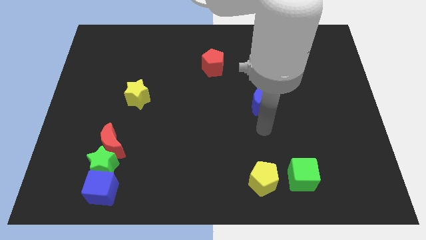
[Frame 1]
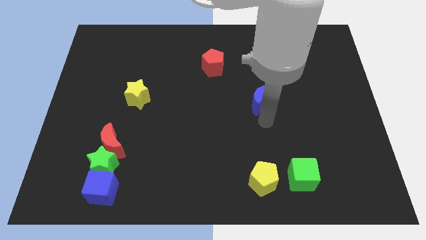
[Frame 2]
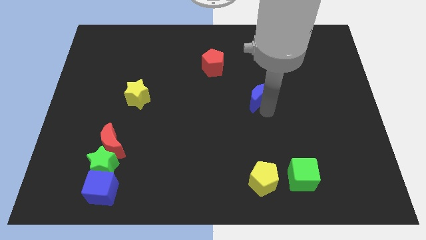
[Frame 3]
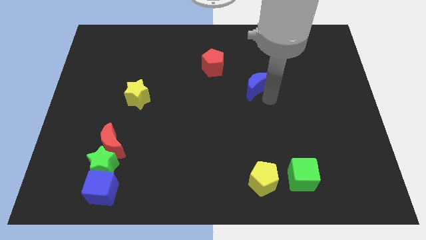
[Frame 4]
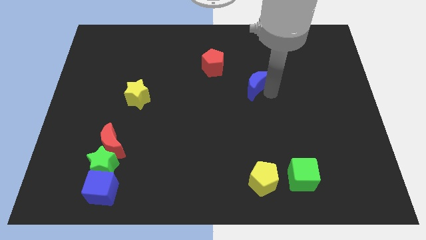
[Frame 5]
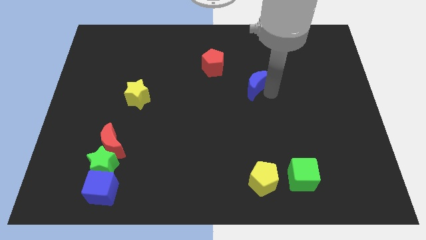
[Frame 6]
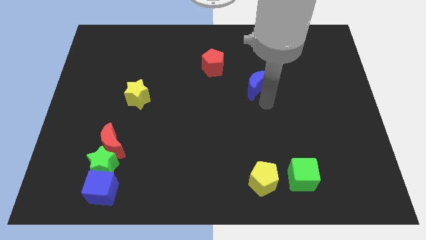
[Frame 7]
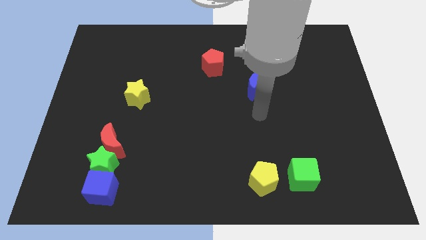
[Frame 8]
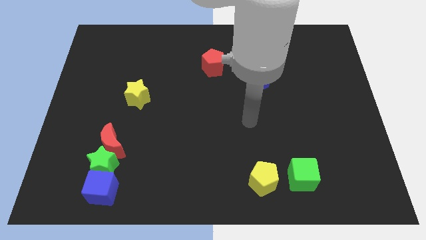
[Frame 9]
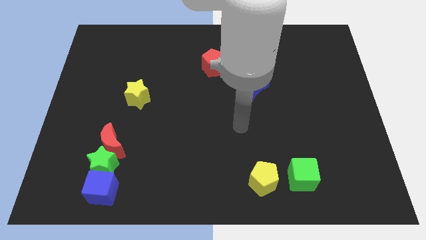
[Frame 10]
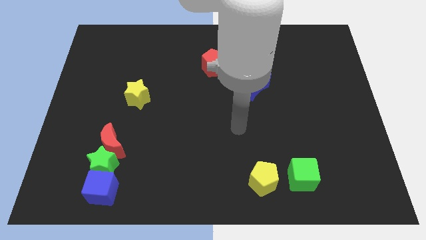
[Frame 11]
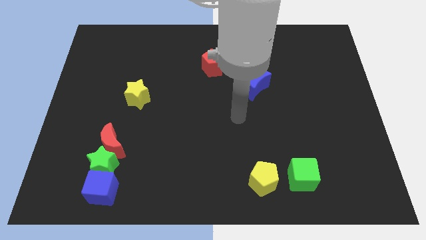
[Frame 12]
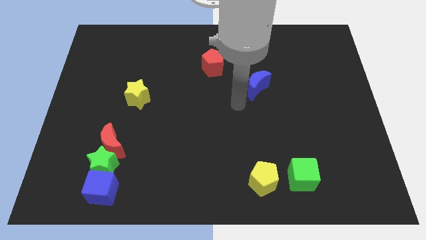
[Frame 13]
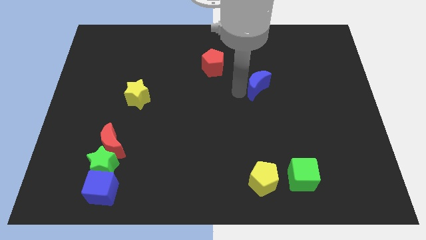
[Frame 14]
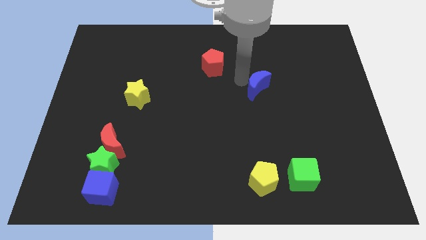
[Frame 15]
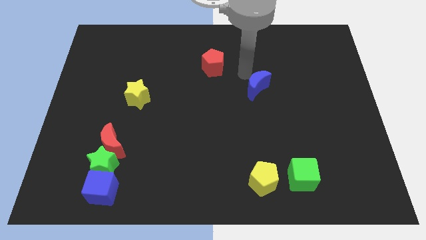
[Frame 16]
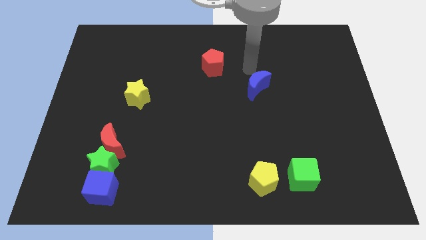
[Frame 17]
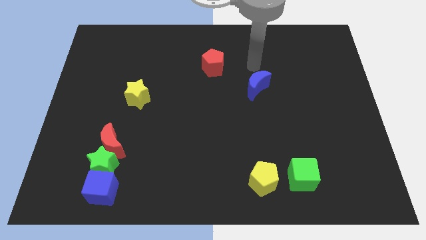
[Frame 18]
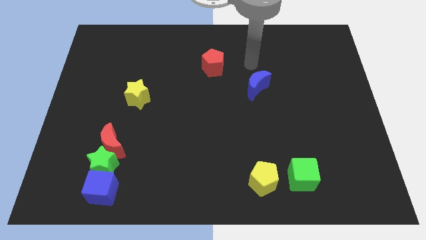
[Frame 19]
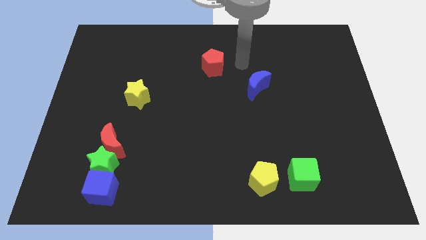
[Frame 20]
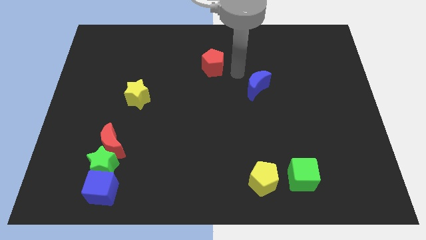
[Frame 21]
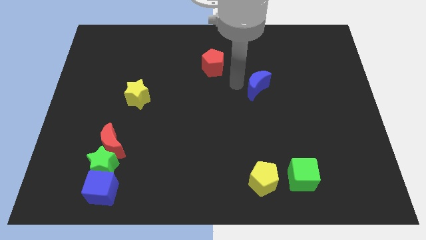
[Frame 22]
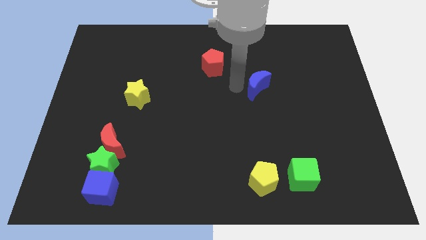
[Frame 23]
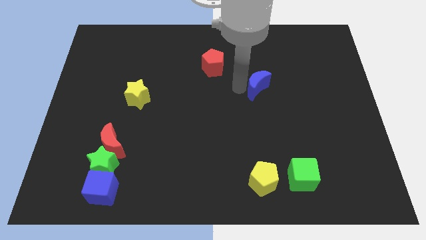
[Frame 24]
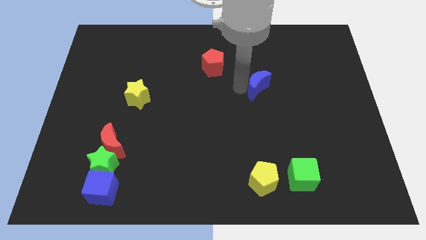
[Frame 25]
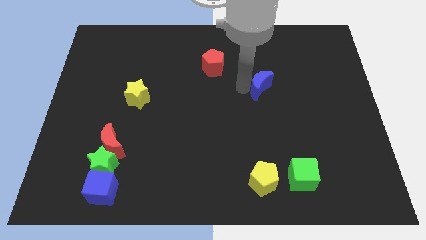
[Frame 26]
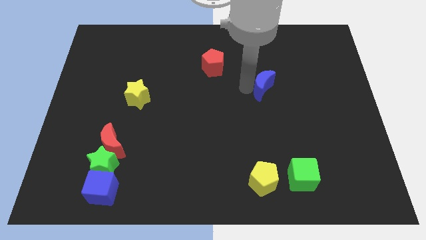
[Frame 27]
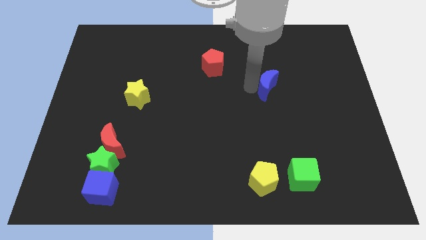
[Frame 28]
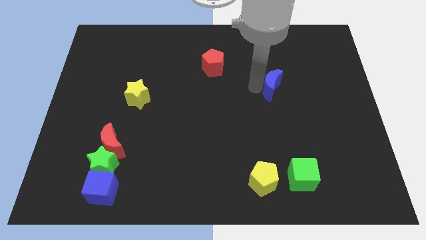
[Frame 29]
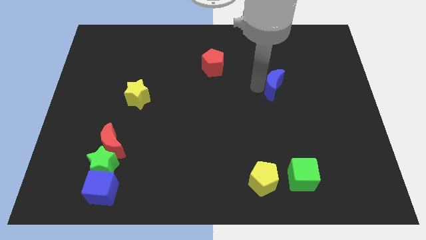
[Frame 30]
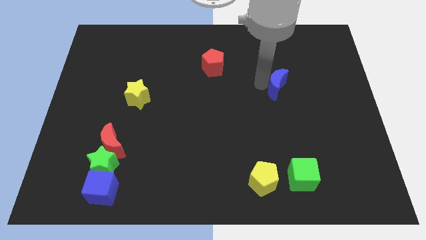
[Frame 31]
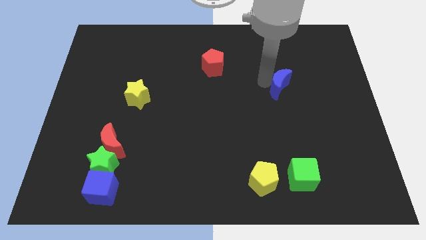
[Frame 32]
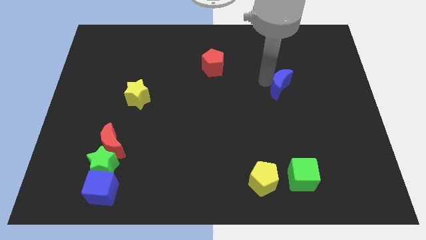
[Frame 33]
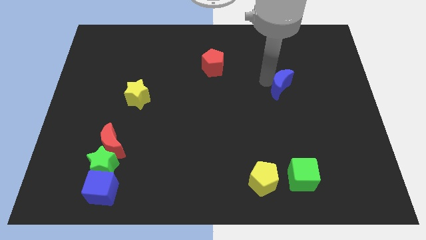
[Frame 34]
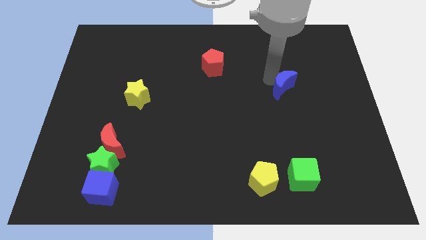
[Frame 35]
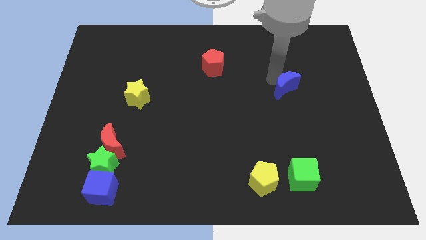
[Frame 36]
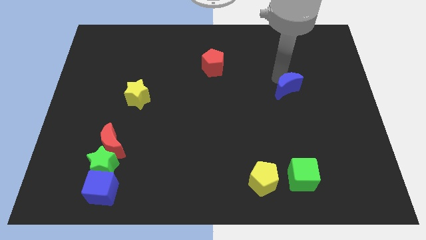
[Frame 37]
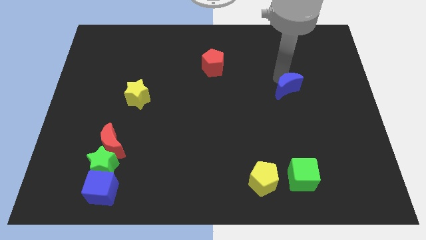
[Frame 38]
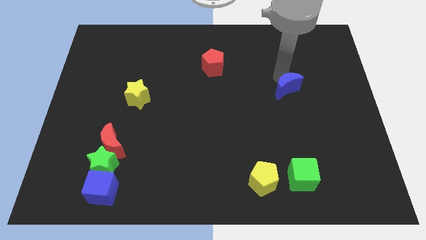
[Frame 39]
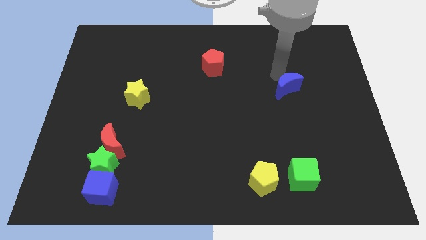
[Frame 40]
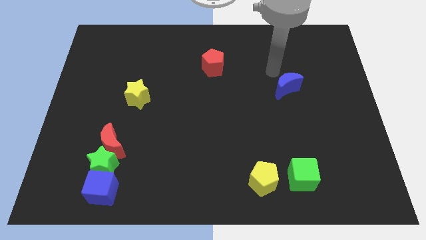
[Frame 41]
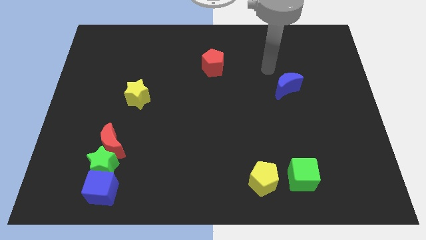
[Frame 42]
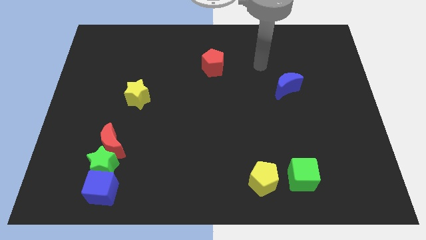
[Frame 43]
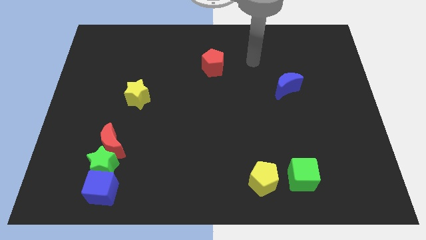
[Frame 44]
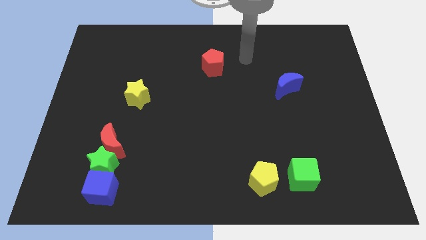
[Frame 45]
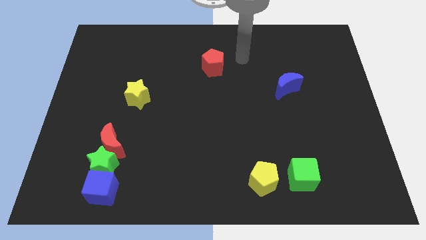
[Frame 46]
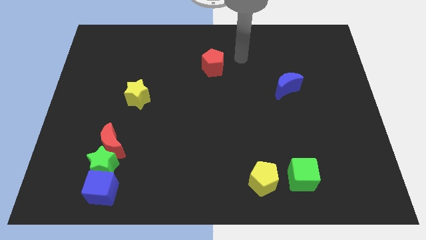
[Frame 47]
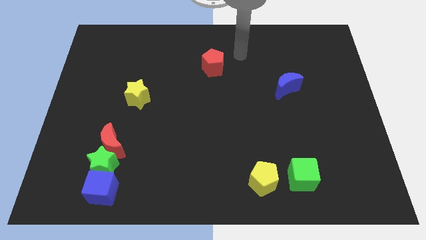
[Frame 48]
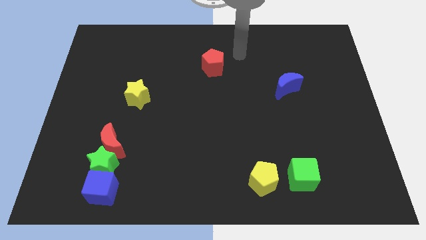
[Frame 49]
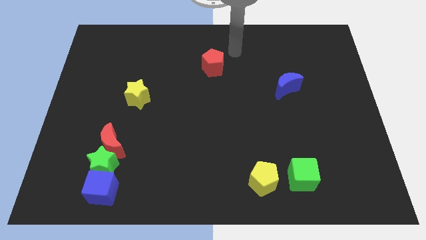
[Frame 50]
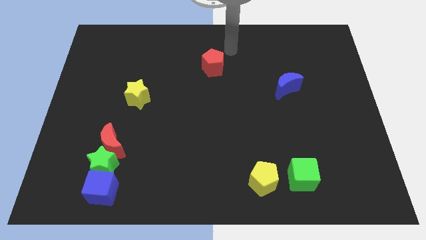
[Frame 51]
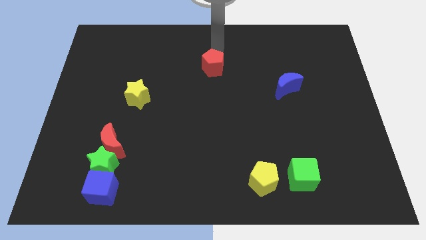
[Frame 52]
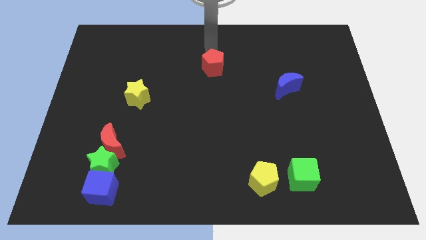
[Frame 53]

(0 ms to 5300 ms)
push the blue crescent above the green cube

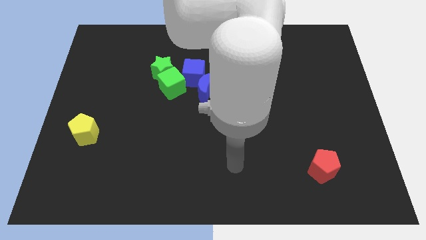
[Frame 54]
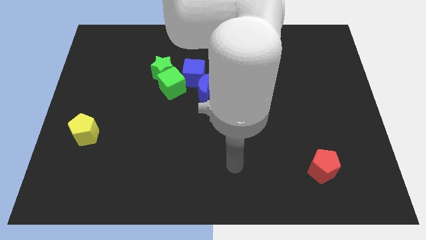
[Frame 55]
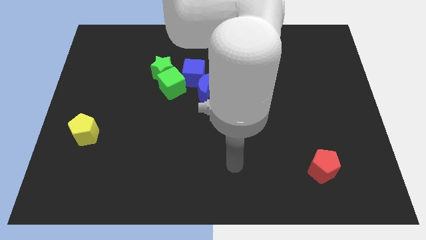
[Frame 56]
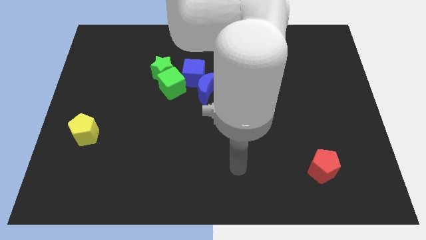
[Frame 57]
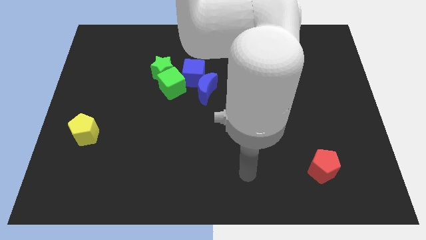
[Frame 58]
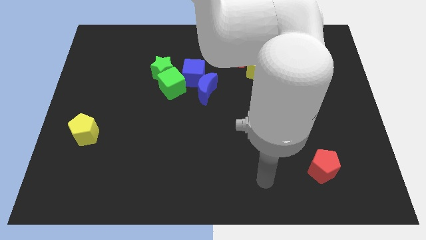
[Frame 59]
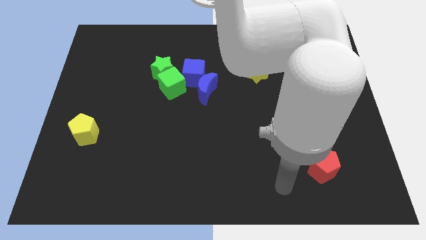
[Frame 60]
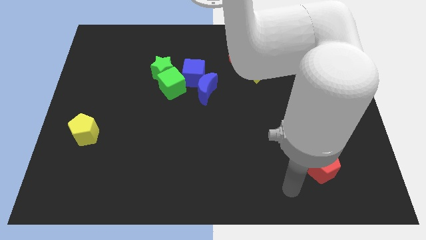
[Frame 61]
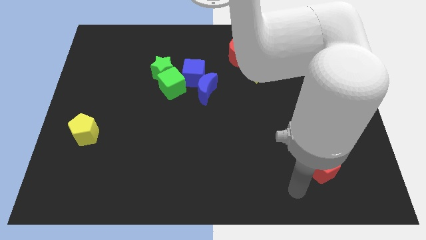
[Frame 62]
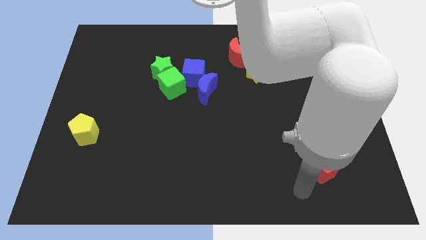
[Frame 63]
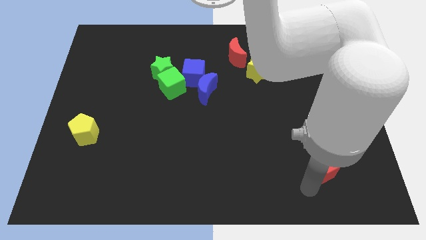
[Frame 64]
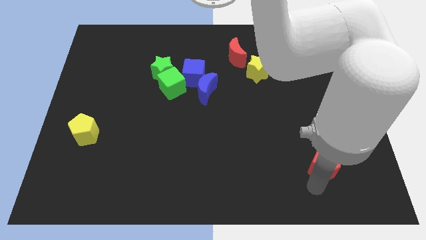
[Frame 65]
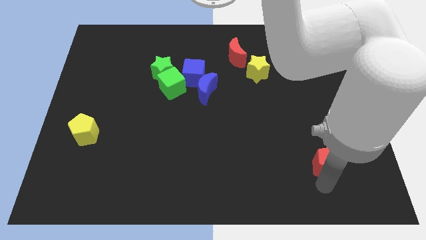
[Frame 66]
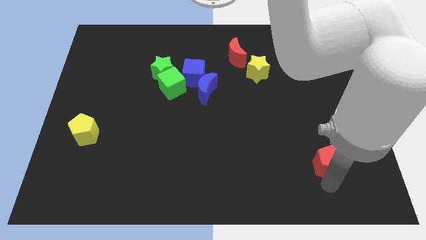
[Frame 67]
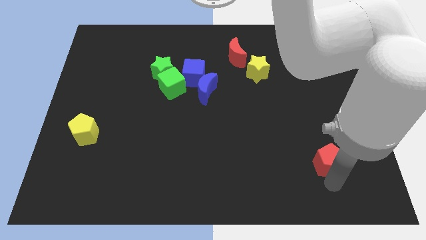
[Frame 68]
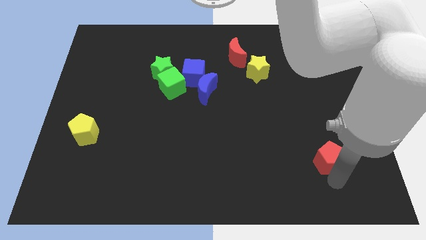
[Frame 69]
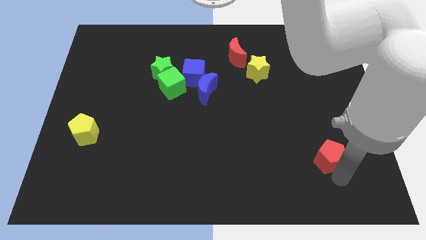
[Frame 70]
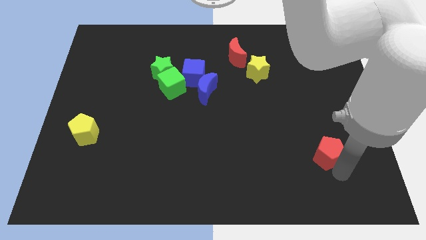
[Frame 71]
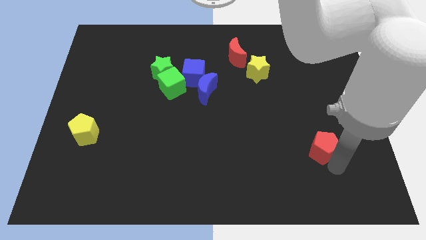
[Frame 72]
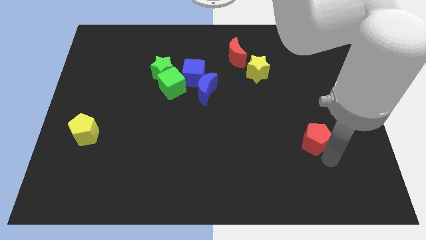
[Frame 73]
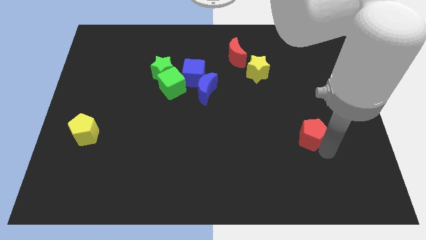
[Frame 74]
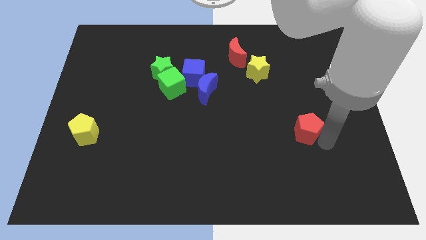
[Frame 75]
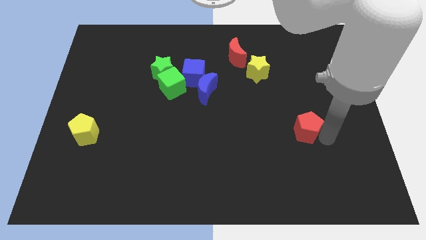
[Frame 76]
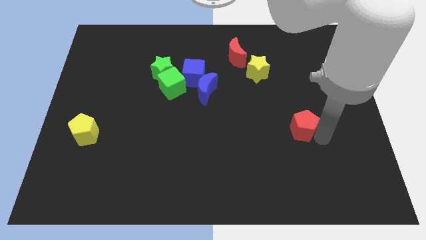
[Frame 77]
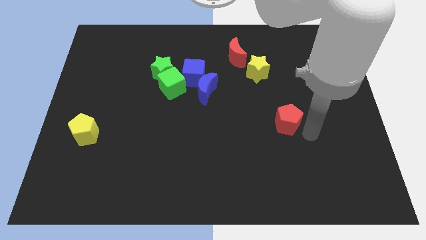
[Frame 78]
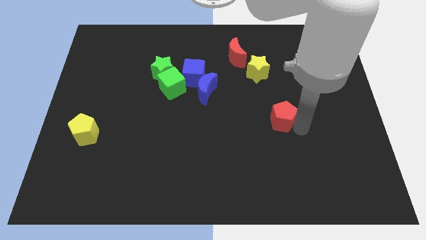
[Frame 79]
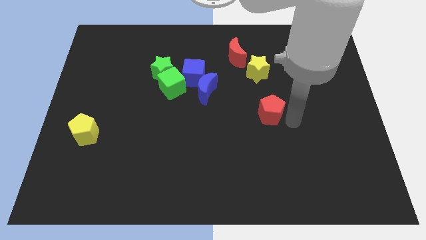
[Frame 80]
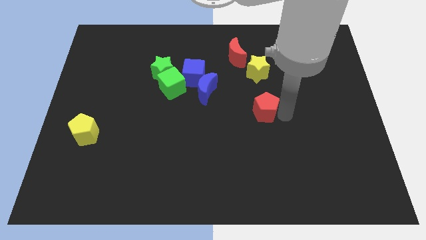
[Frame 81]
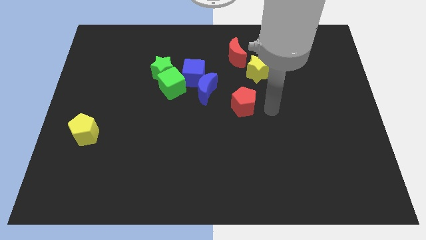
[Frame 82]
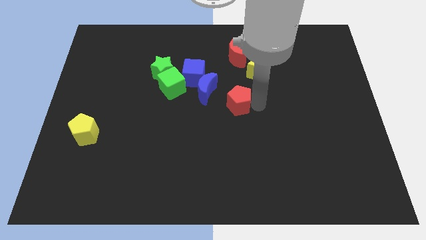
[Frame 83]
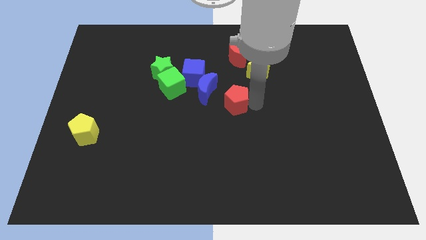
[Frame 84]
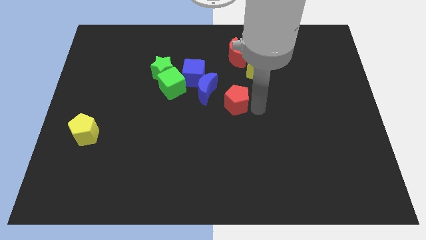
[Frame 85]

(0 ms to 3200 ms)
push red pentagon towards blue moon

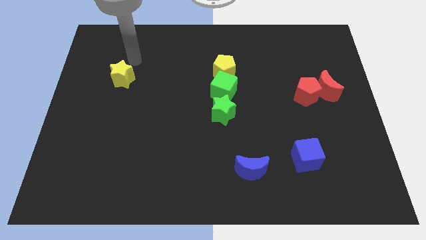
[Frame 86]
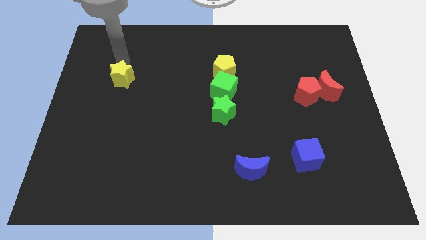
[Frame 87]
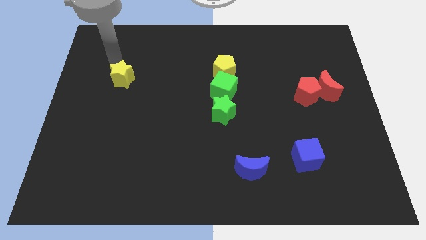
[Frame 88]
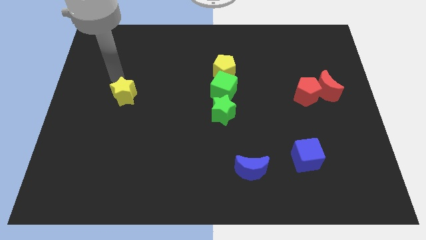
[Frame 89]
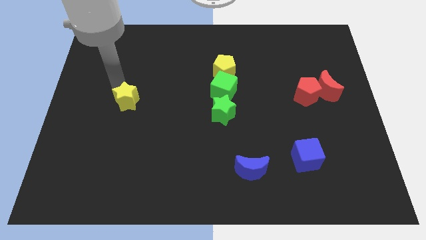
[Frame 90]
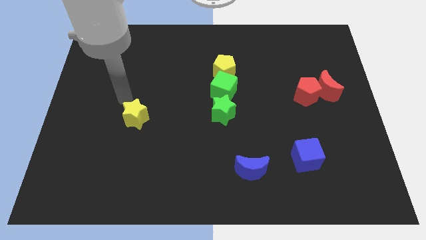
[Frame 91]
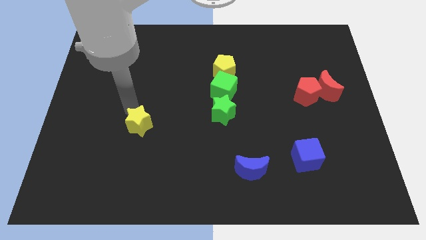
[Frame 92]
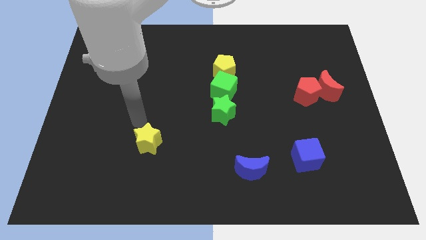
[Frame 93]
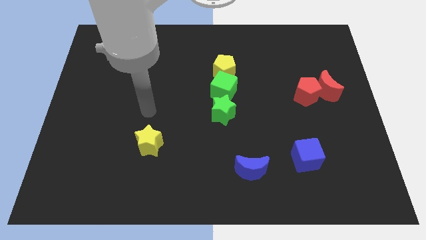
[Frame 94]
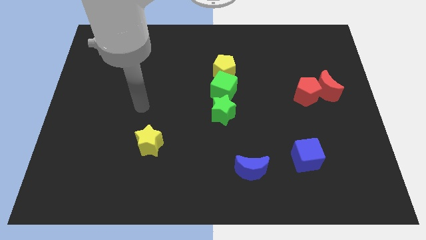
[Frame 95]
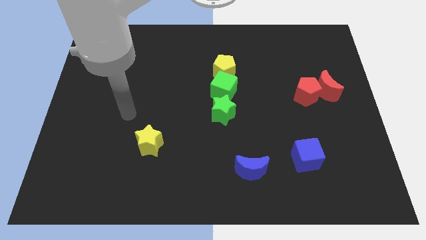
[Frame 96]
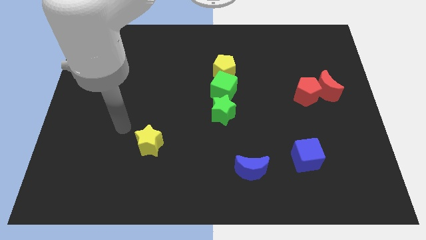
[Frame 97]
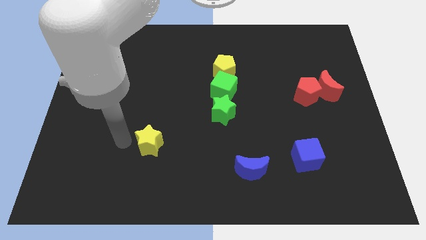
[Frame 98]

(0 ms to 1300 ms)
push the yellow star towards the bottom right
